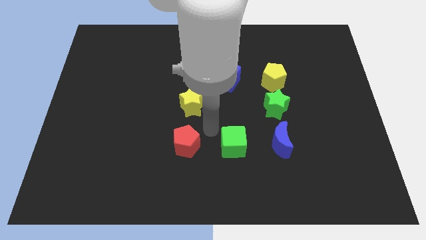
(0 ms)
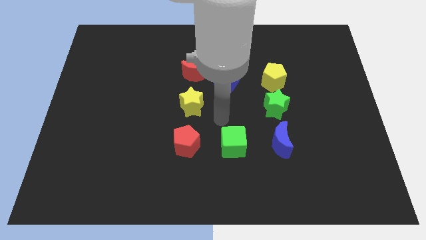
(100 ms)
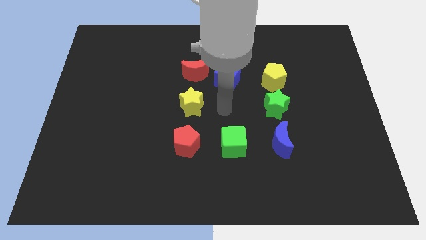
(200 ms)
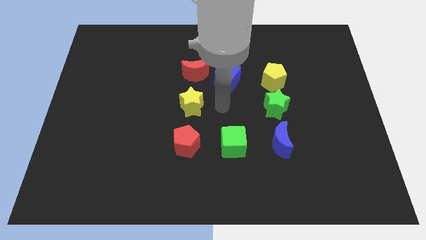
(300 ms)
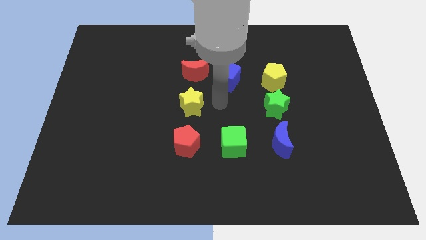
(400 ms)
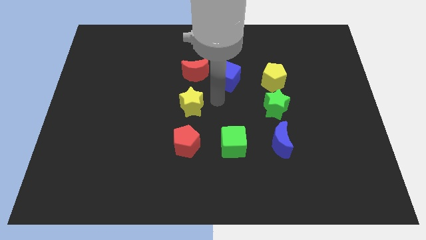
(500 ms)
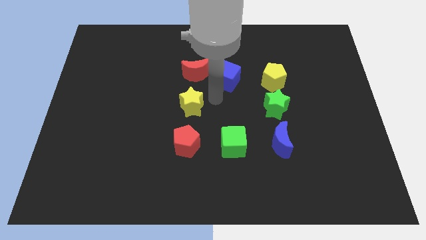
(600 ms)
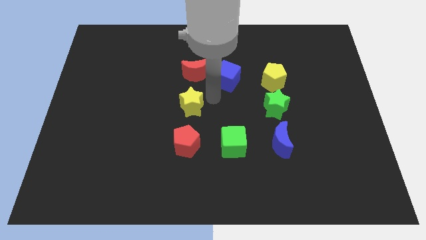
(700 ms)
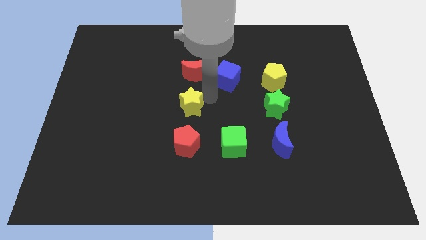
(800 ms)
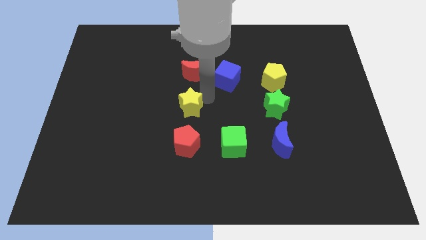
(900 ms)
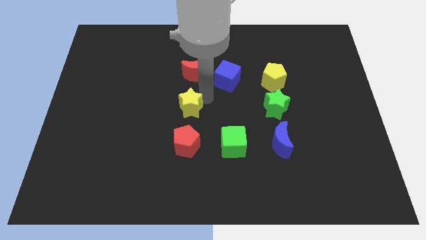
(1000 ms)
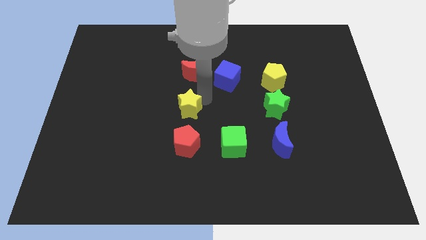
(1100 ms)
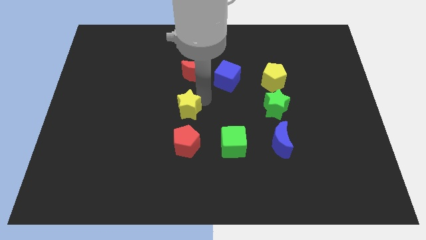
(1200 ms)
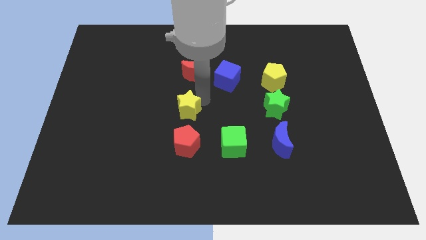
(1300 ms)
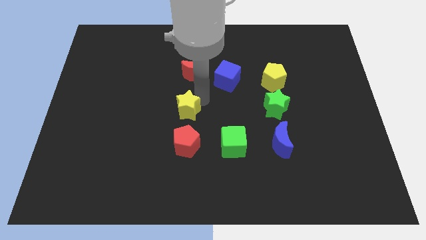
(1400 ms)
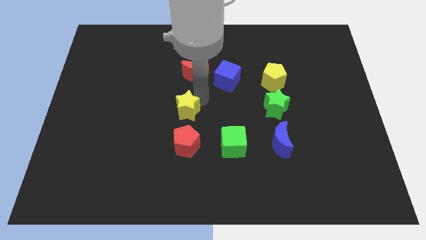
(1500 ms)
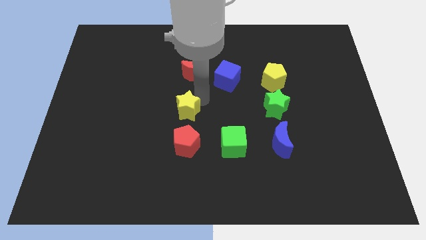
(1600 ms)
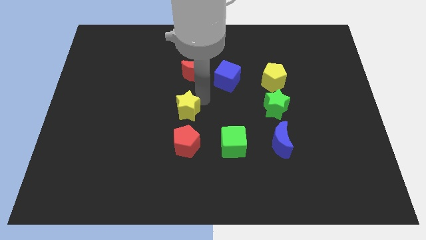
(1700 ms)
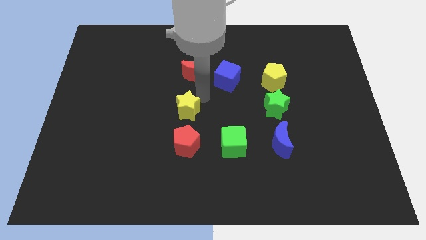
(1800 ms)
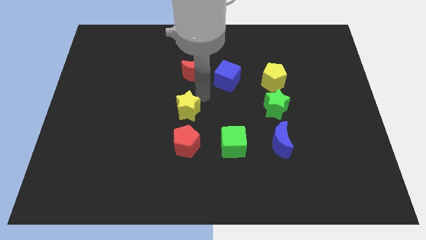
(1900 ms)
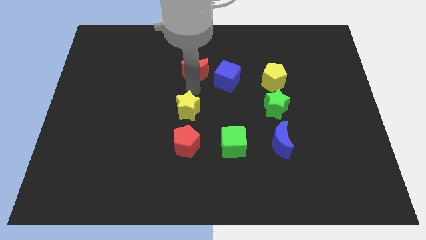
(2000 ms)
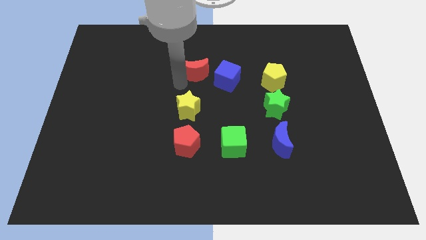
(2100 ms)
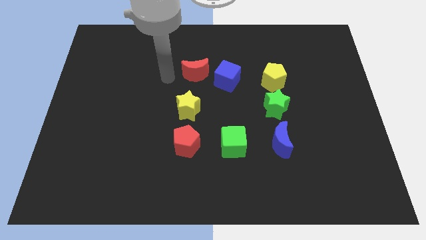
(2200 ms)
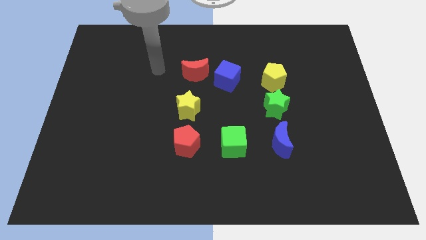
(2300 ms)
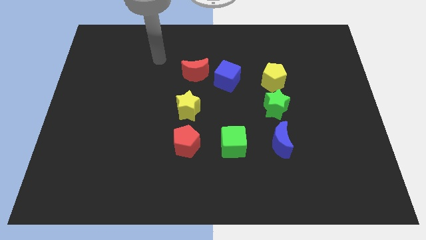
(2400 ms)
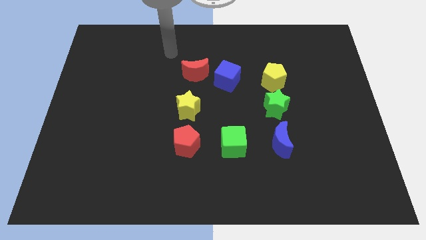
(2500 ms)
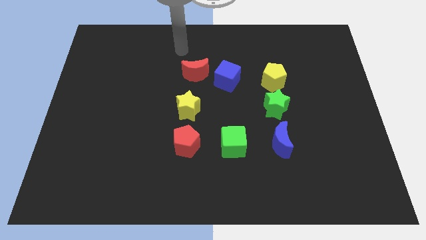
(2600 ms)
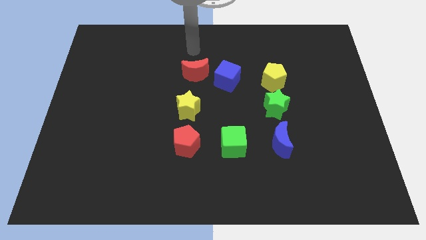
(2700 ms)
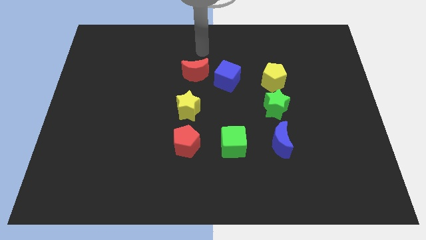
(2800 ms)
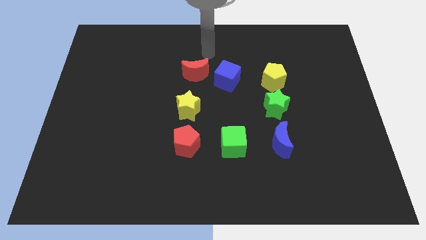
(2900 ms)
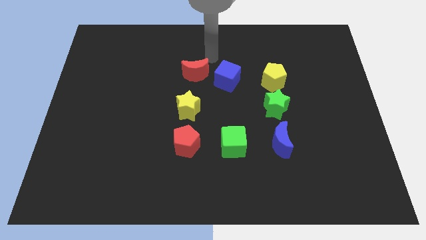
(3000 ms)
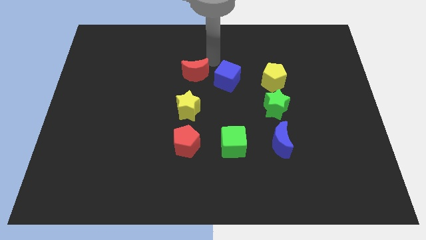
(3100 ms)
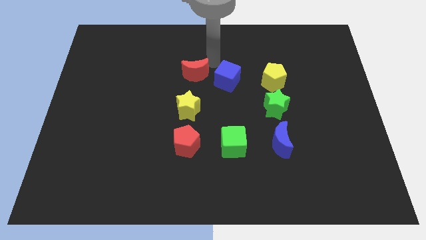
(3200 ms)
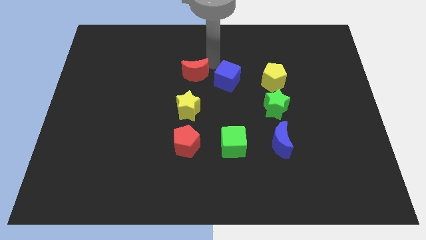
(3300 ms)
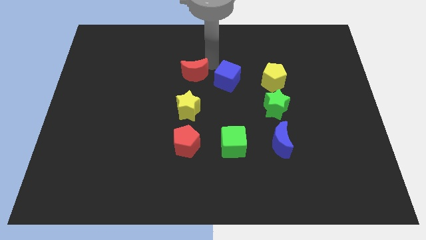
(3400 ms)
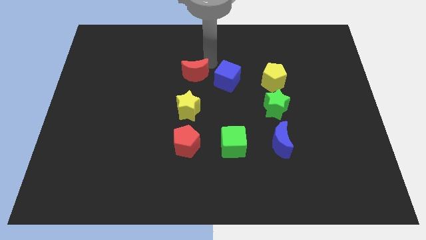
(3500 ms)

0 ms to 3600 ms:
adjust the yellow star in between the red crescent and red pentagon

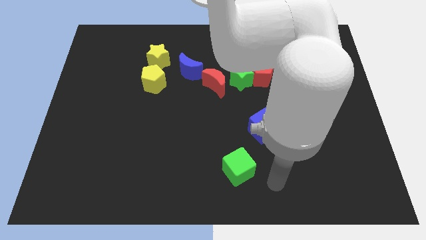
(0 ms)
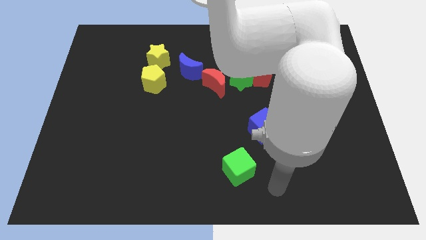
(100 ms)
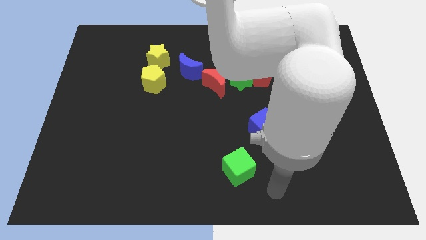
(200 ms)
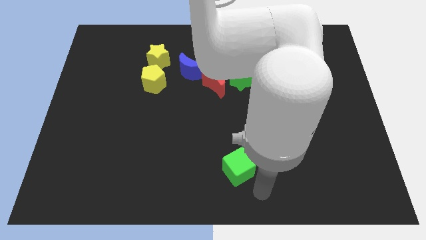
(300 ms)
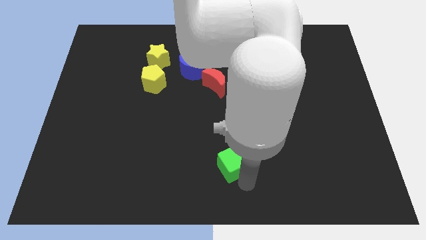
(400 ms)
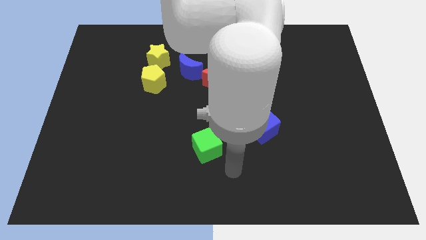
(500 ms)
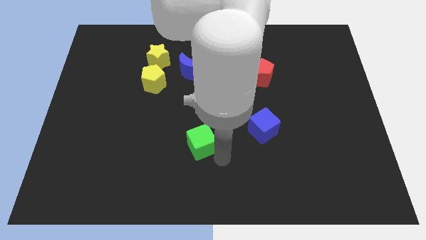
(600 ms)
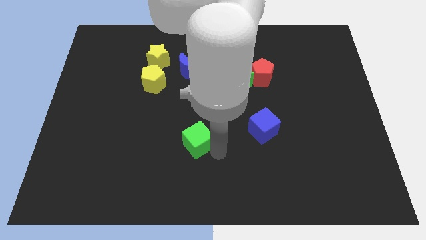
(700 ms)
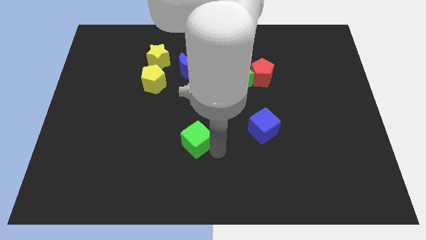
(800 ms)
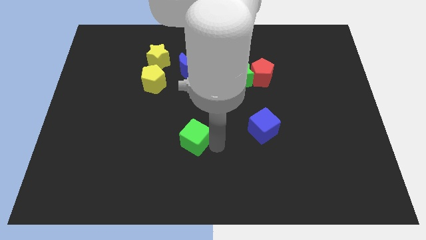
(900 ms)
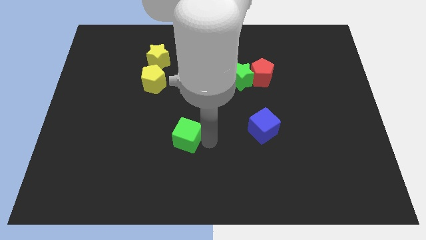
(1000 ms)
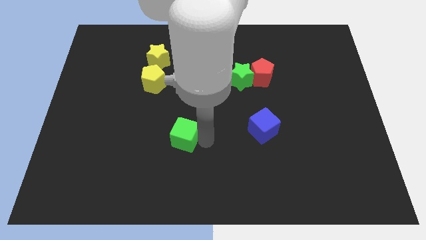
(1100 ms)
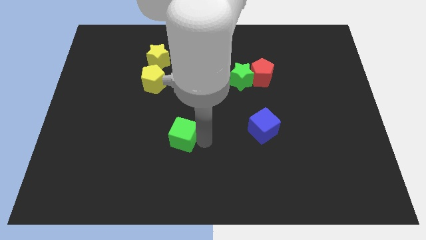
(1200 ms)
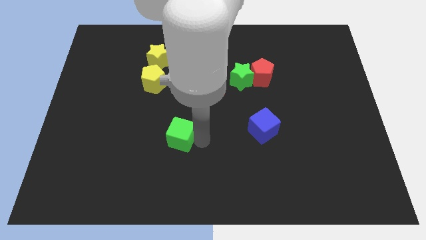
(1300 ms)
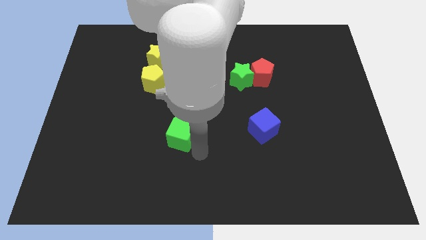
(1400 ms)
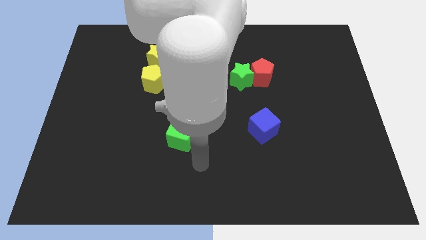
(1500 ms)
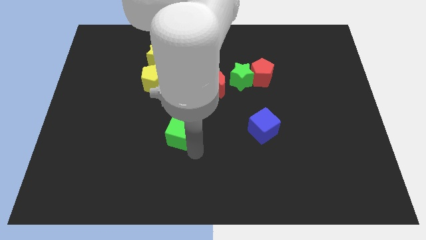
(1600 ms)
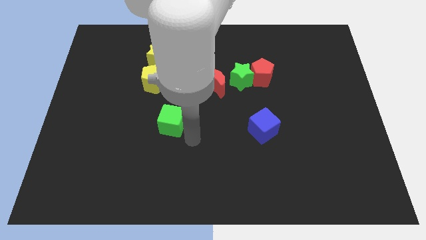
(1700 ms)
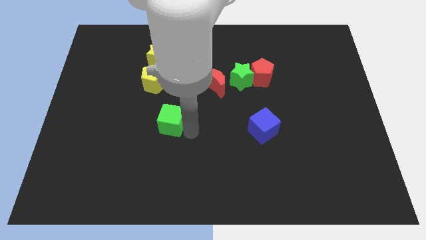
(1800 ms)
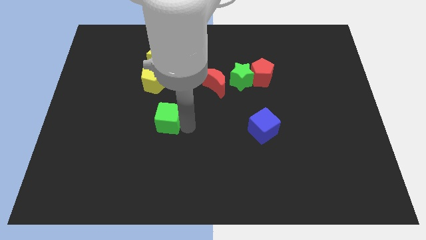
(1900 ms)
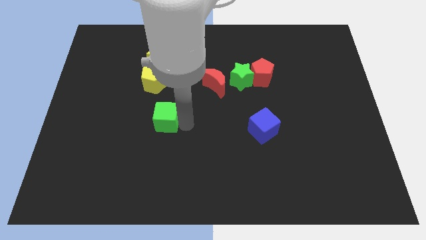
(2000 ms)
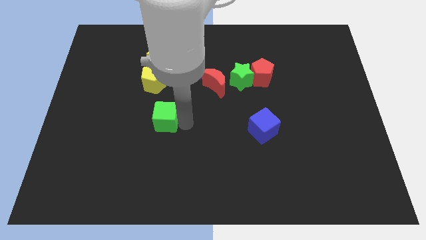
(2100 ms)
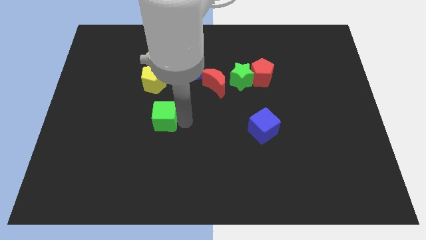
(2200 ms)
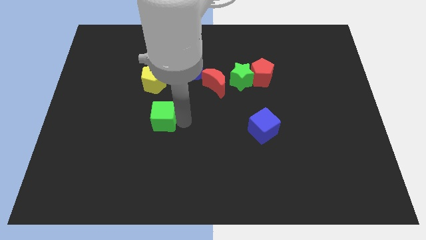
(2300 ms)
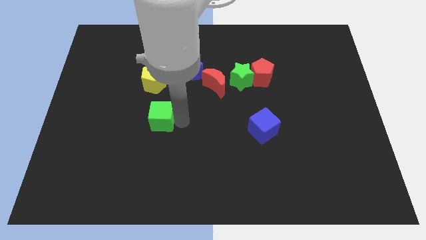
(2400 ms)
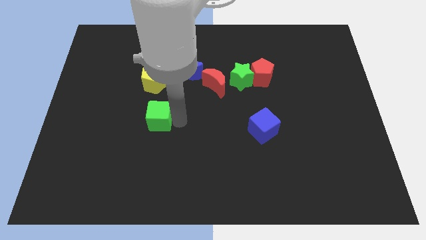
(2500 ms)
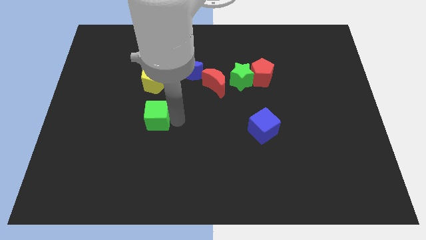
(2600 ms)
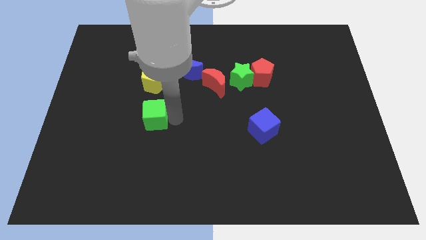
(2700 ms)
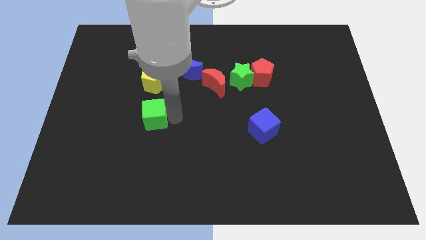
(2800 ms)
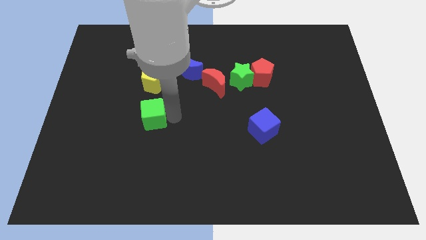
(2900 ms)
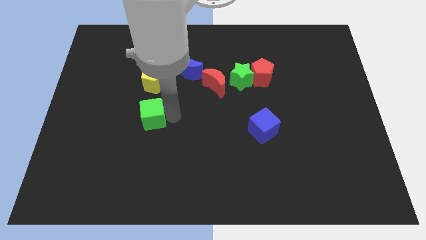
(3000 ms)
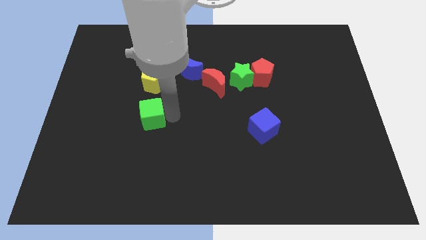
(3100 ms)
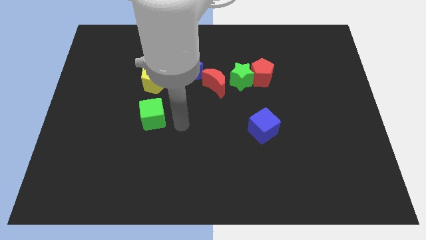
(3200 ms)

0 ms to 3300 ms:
move the green cube diagonally upwards

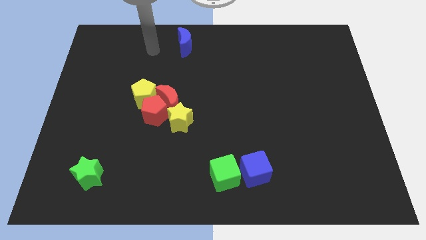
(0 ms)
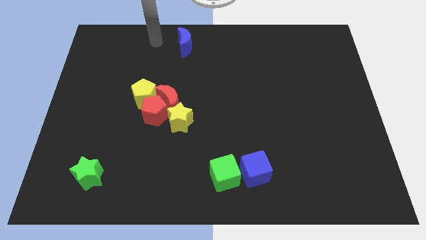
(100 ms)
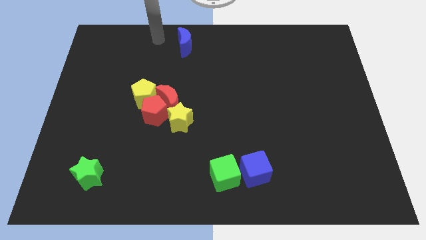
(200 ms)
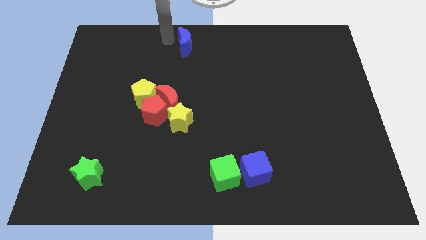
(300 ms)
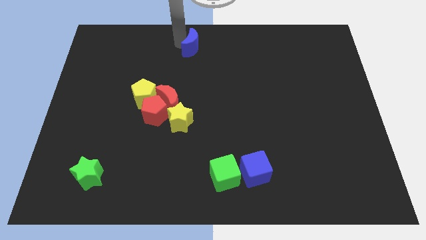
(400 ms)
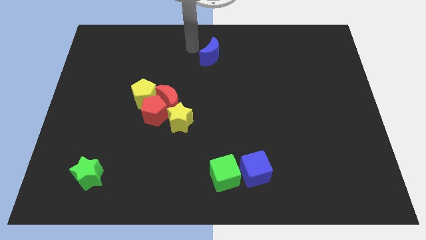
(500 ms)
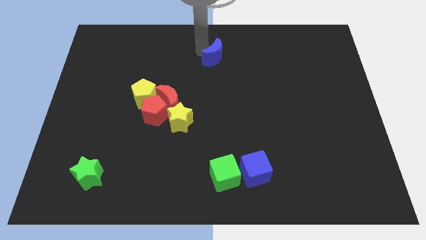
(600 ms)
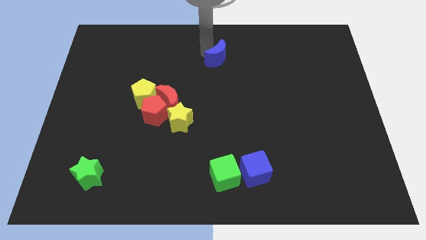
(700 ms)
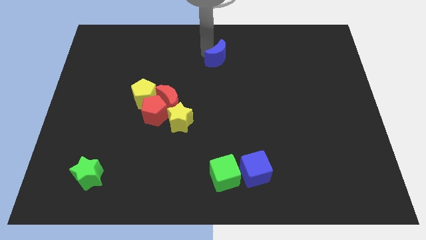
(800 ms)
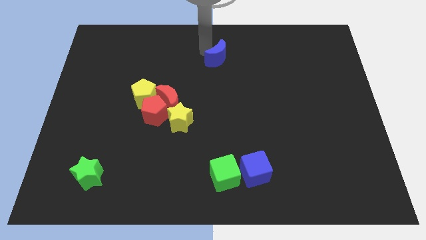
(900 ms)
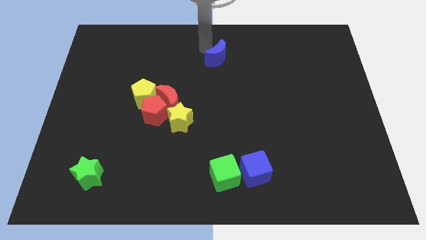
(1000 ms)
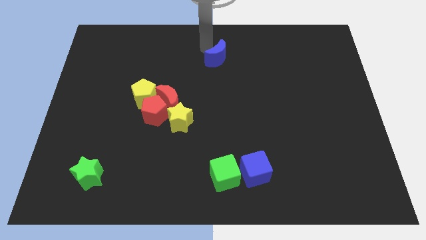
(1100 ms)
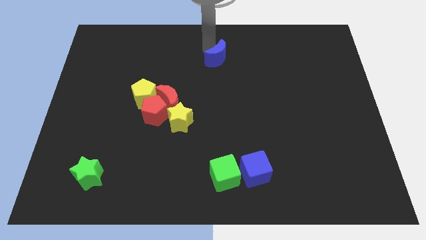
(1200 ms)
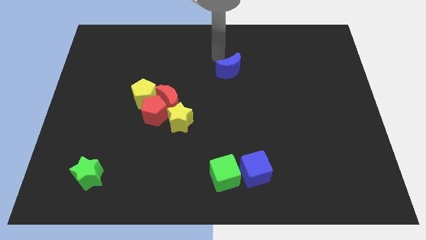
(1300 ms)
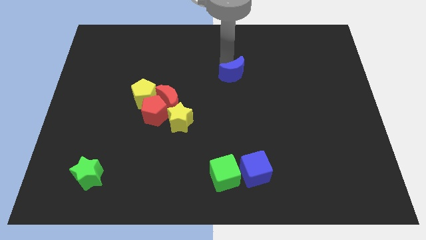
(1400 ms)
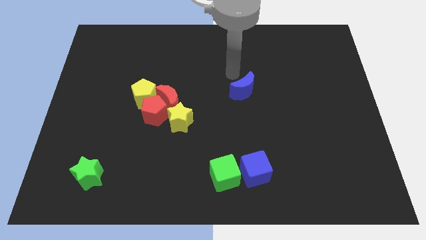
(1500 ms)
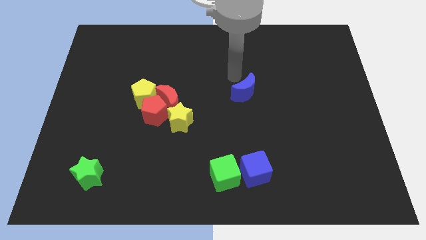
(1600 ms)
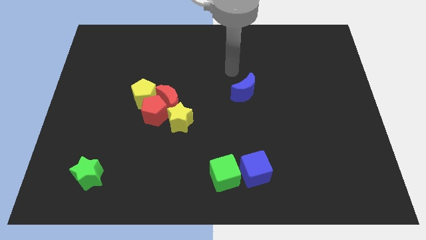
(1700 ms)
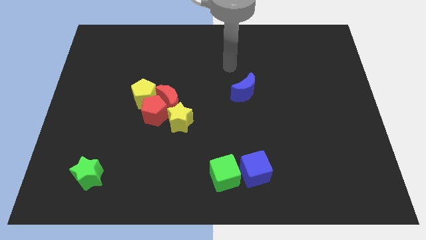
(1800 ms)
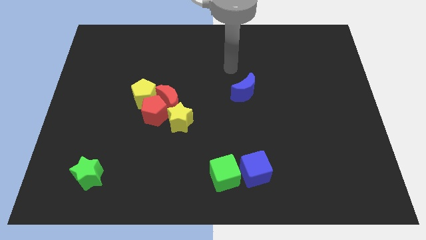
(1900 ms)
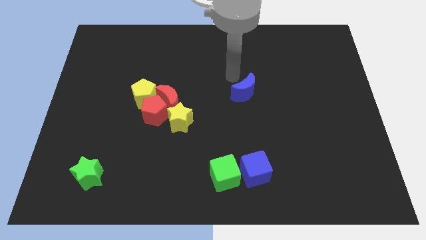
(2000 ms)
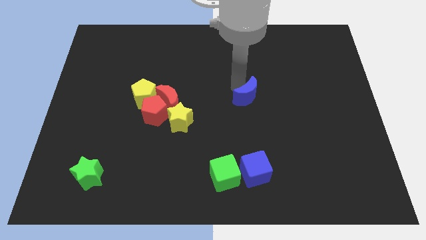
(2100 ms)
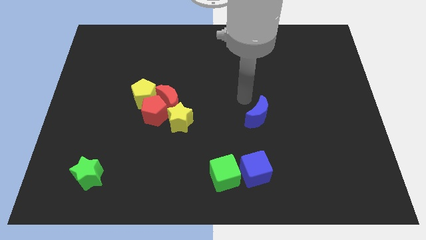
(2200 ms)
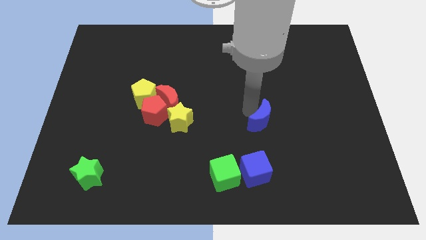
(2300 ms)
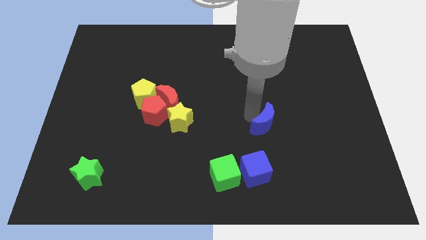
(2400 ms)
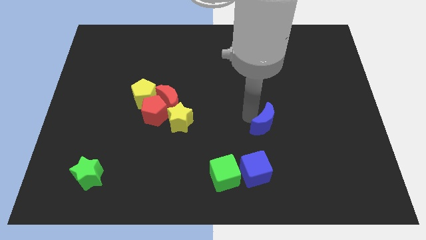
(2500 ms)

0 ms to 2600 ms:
push blue crescent towards down
